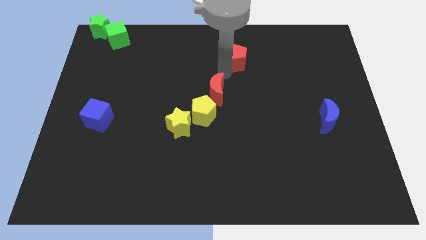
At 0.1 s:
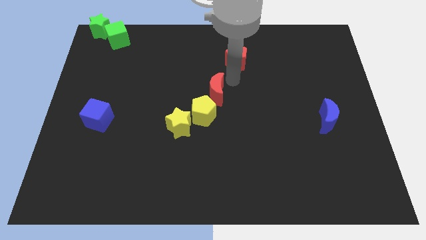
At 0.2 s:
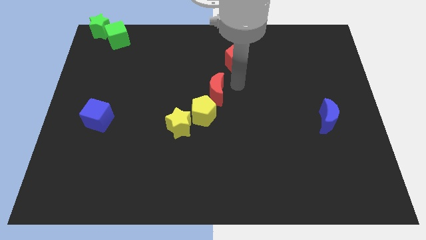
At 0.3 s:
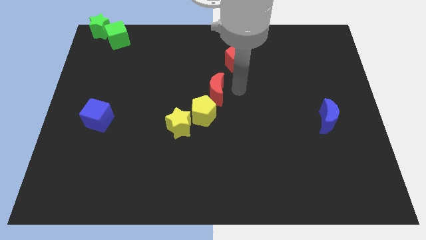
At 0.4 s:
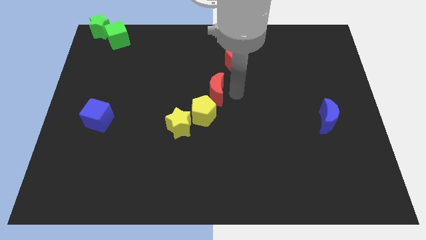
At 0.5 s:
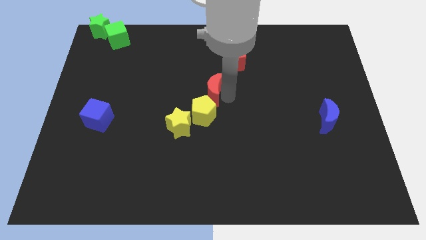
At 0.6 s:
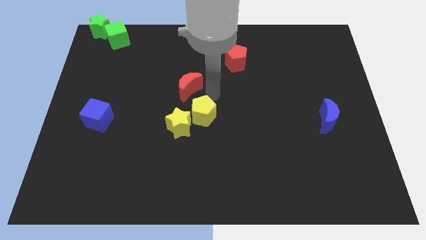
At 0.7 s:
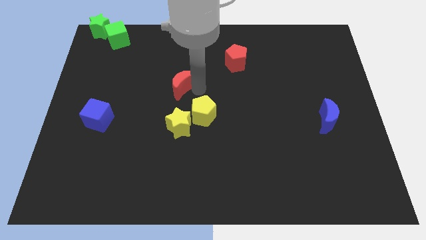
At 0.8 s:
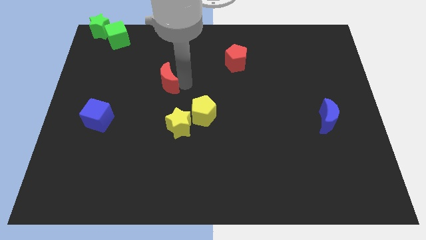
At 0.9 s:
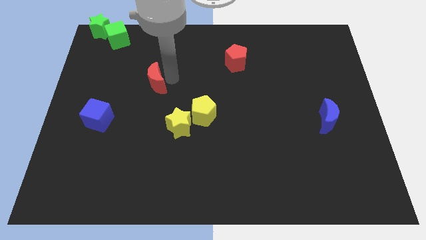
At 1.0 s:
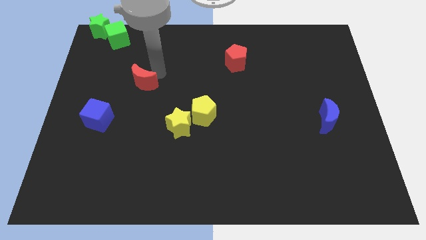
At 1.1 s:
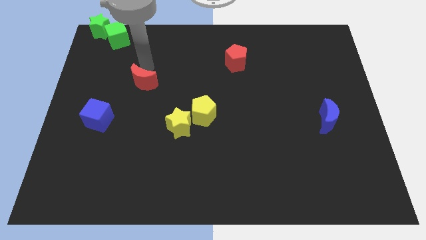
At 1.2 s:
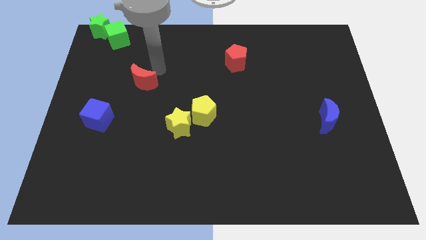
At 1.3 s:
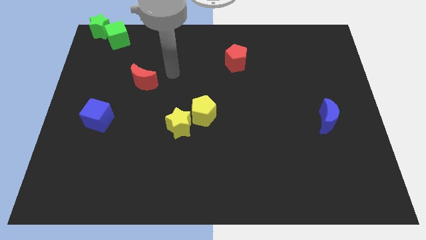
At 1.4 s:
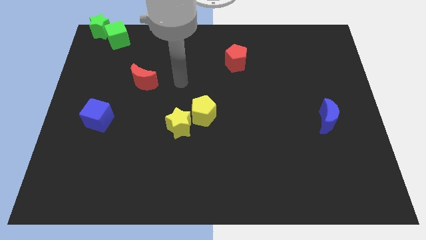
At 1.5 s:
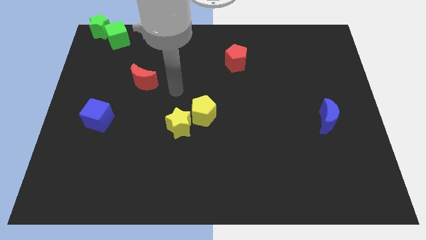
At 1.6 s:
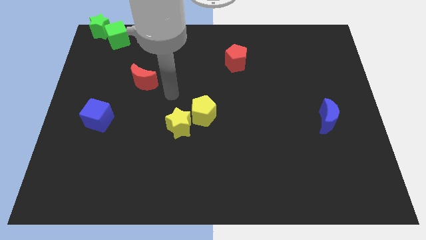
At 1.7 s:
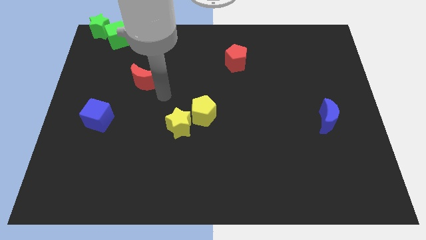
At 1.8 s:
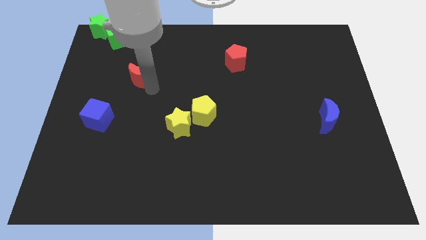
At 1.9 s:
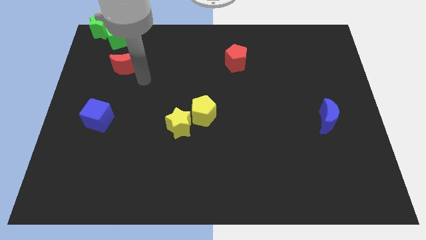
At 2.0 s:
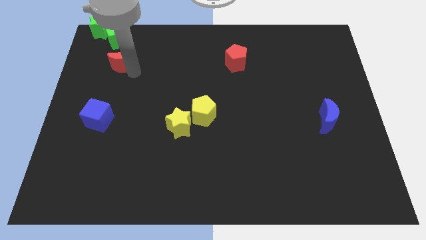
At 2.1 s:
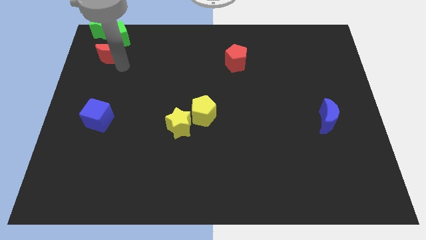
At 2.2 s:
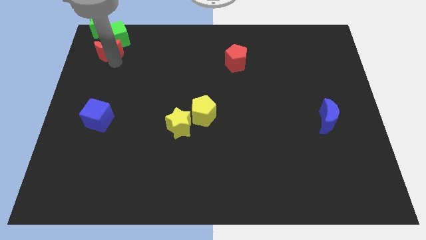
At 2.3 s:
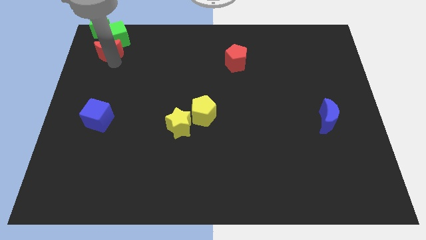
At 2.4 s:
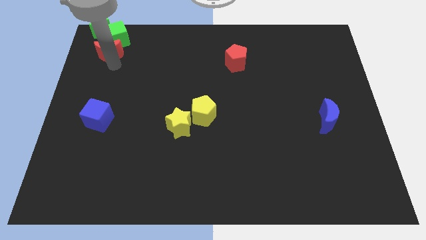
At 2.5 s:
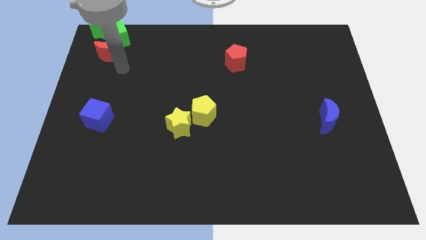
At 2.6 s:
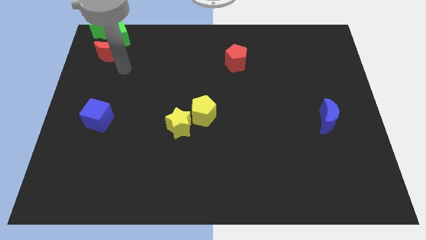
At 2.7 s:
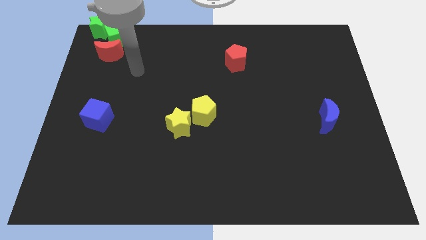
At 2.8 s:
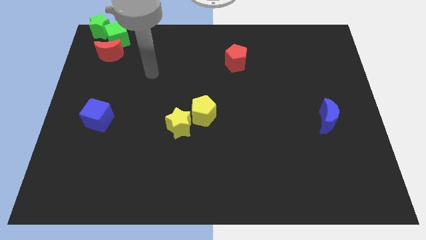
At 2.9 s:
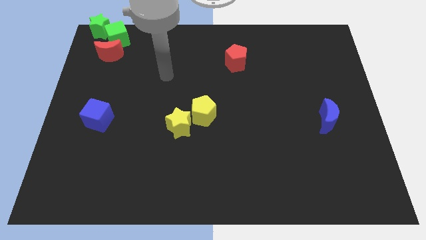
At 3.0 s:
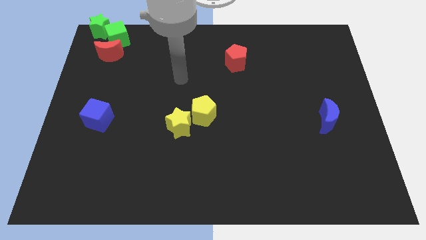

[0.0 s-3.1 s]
push red moon towards top left

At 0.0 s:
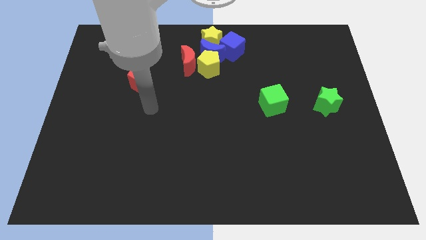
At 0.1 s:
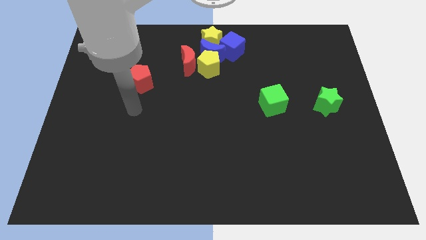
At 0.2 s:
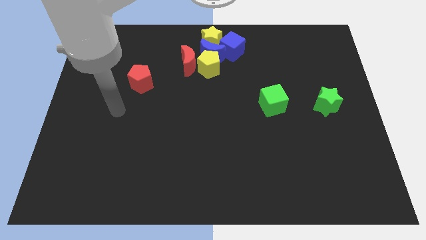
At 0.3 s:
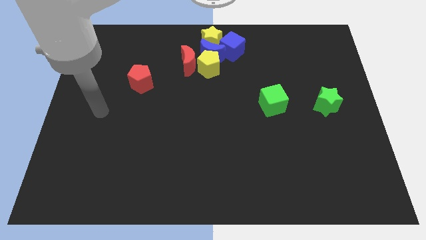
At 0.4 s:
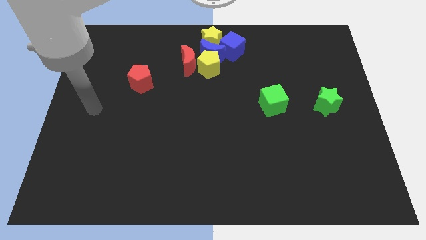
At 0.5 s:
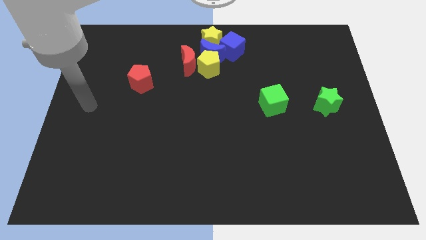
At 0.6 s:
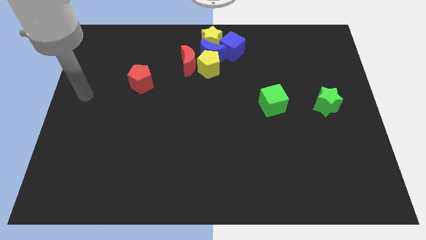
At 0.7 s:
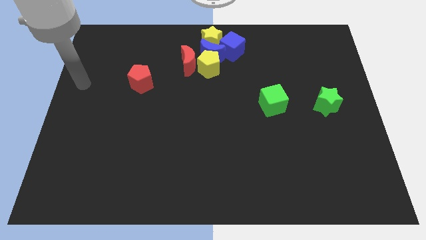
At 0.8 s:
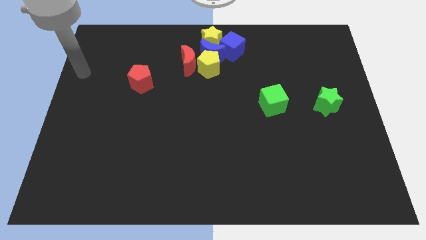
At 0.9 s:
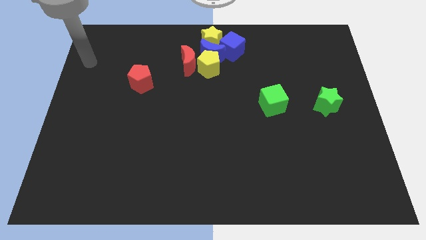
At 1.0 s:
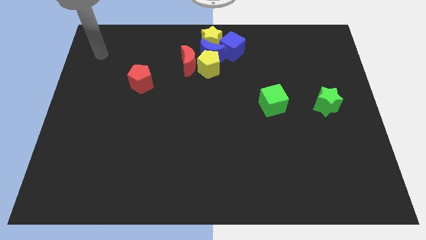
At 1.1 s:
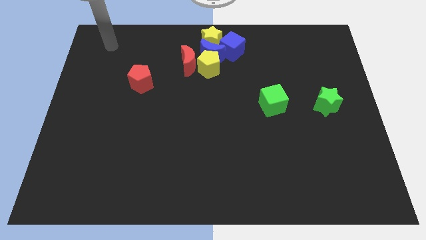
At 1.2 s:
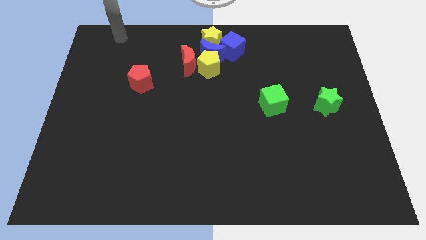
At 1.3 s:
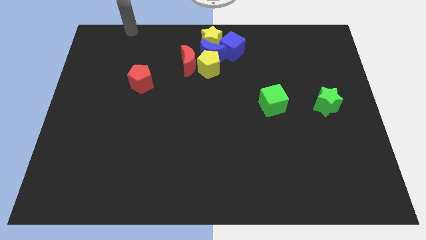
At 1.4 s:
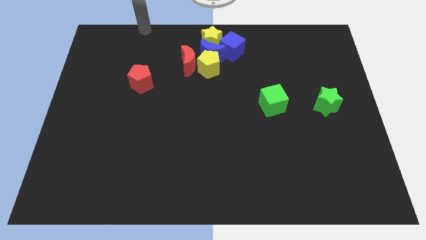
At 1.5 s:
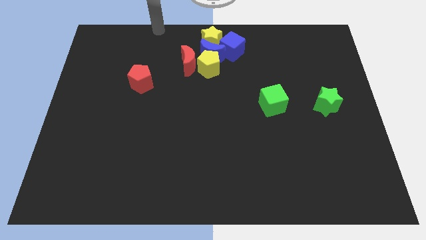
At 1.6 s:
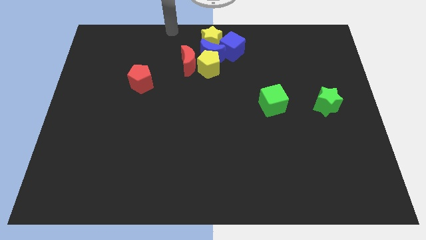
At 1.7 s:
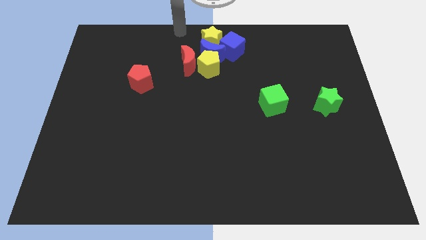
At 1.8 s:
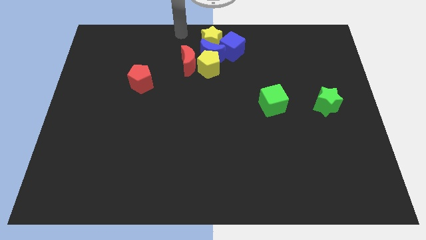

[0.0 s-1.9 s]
point your arm at the top of the red crescent

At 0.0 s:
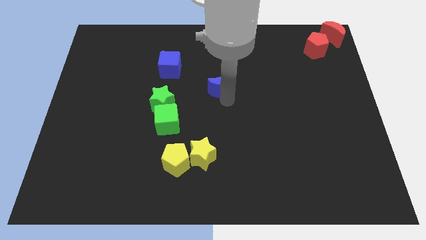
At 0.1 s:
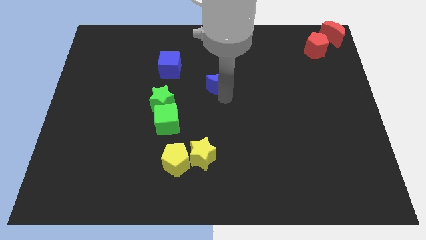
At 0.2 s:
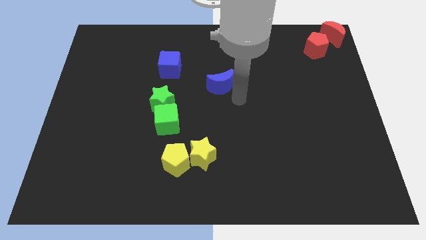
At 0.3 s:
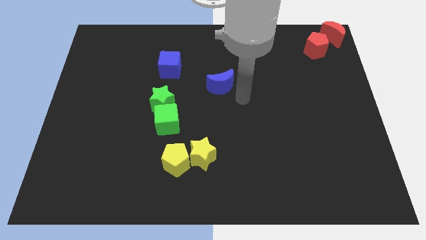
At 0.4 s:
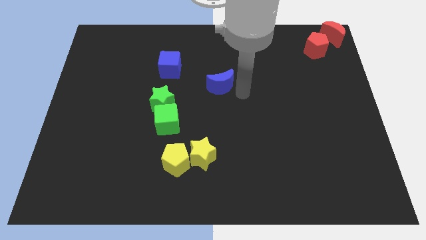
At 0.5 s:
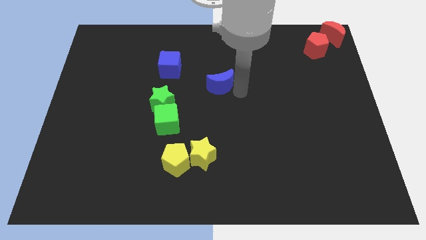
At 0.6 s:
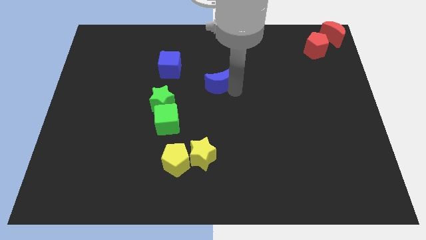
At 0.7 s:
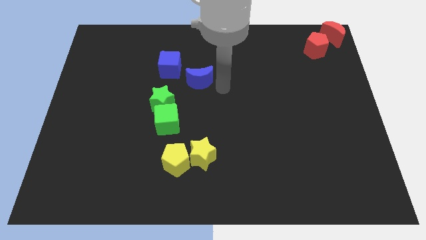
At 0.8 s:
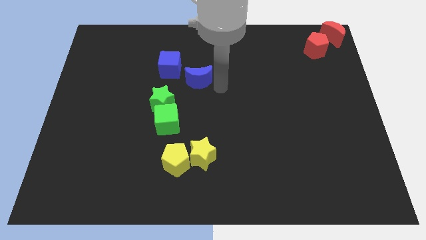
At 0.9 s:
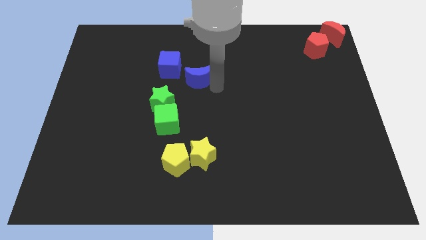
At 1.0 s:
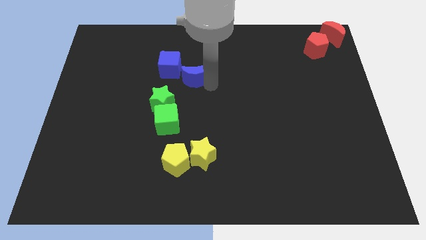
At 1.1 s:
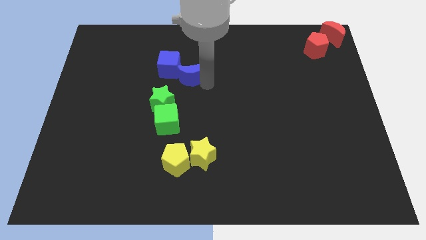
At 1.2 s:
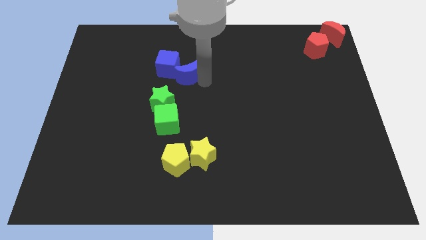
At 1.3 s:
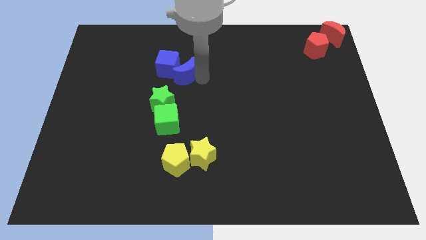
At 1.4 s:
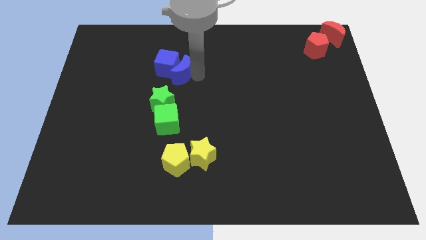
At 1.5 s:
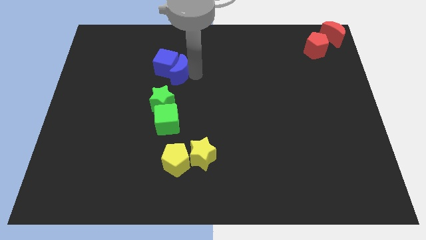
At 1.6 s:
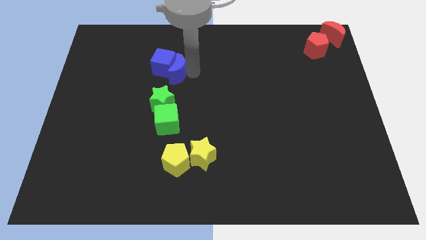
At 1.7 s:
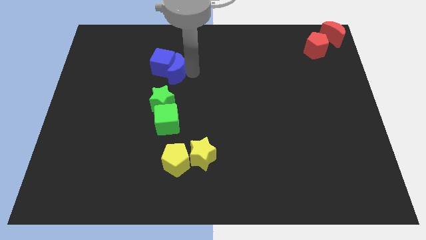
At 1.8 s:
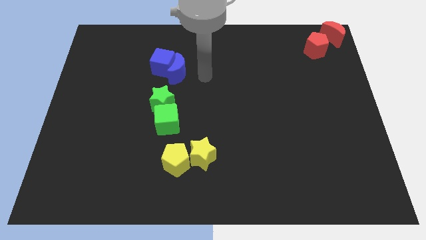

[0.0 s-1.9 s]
push the blue crescent into the blue cube

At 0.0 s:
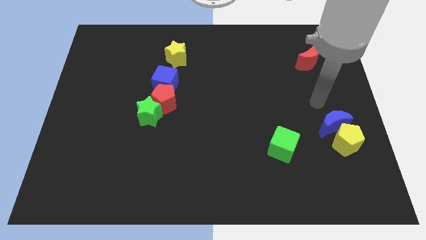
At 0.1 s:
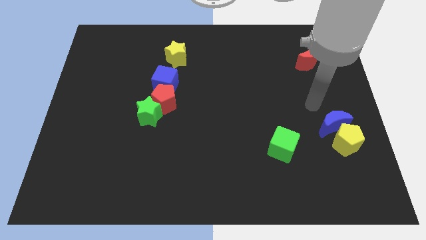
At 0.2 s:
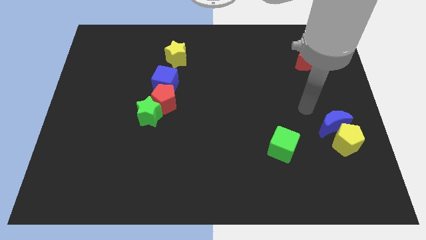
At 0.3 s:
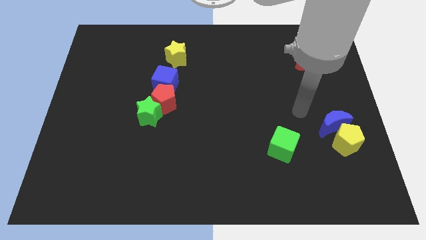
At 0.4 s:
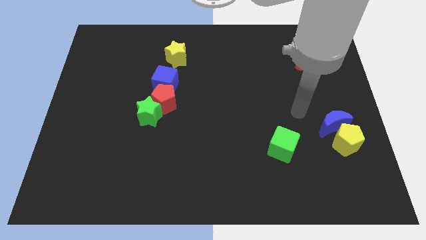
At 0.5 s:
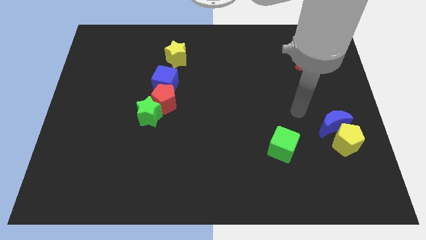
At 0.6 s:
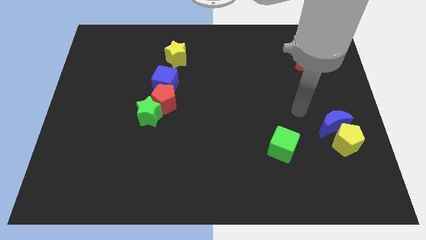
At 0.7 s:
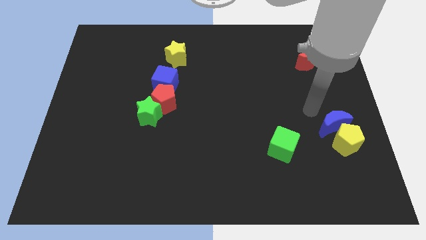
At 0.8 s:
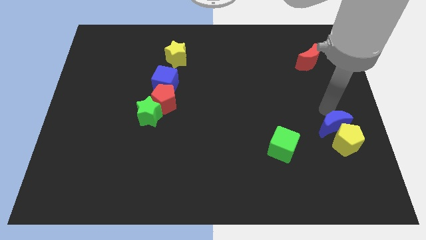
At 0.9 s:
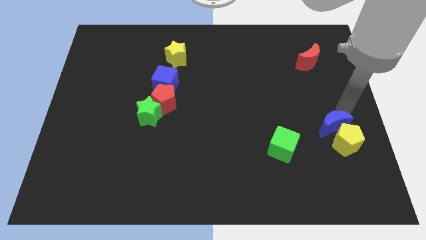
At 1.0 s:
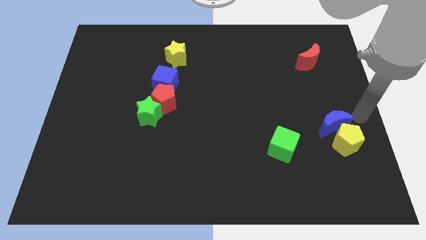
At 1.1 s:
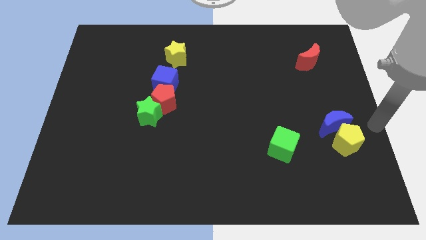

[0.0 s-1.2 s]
move arm right side to blue crescent

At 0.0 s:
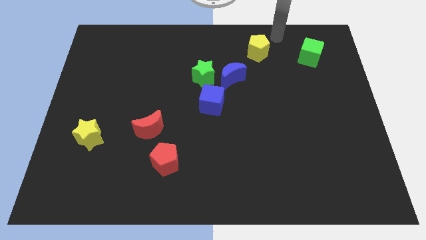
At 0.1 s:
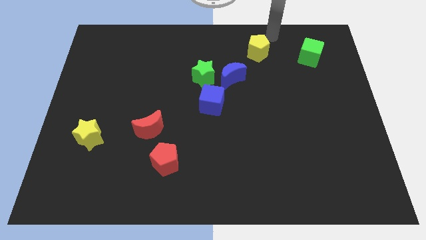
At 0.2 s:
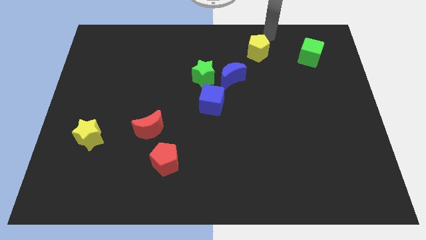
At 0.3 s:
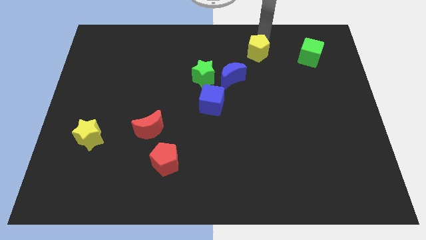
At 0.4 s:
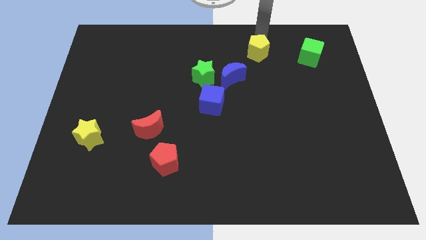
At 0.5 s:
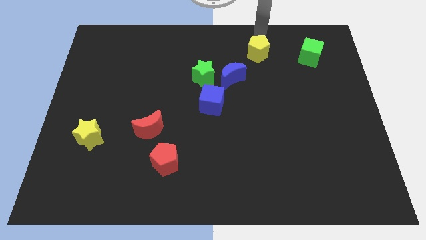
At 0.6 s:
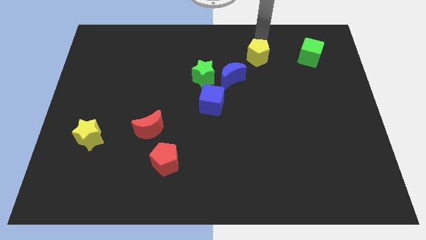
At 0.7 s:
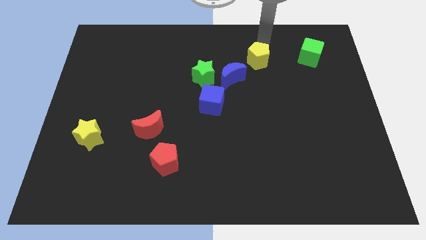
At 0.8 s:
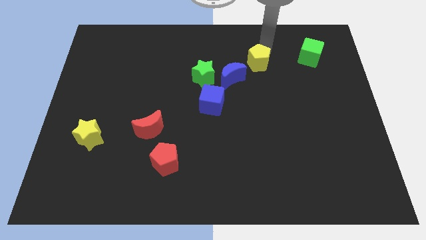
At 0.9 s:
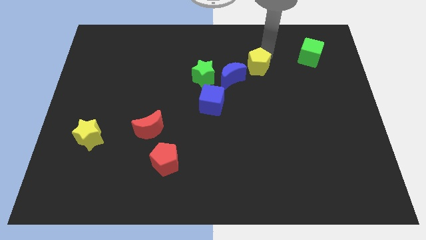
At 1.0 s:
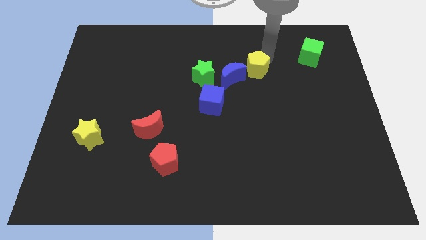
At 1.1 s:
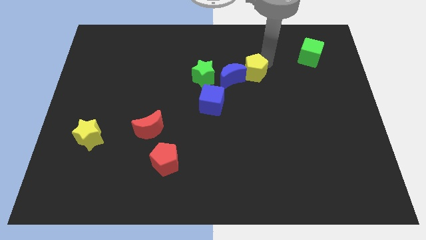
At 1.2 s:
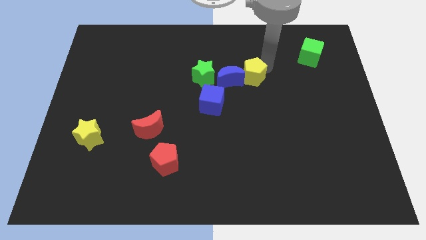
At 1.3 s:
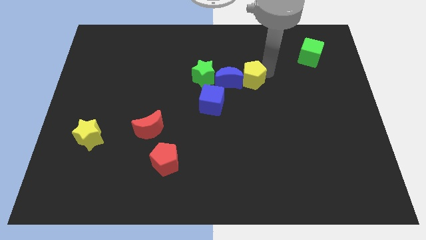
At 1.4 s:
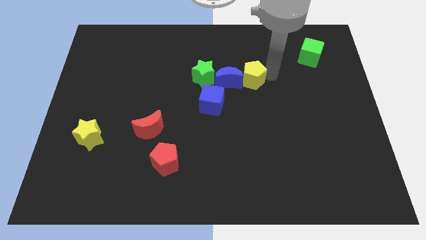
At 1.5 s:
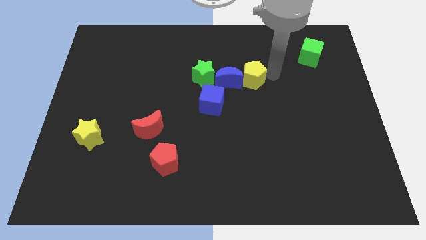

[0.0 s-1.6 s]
put the yellow pentagon to the right of the blue crescent
